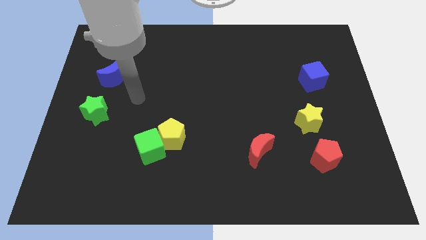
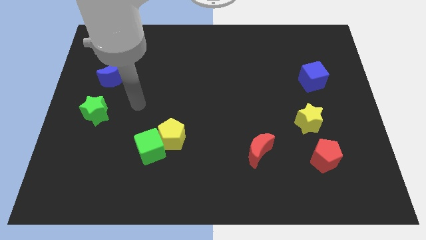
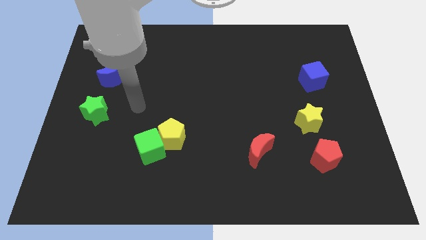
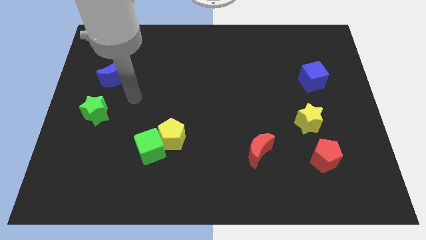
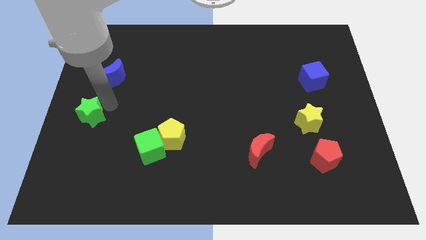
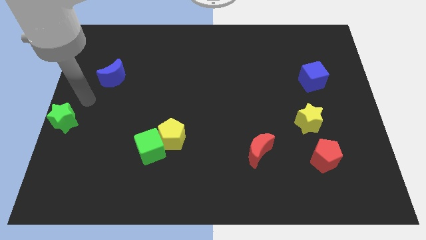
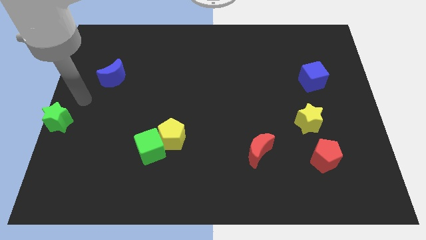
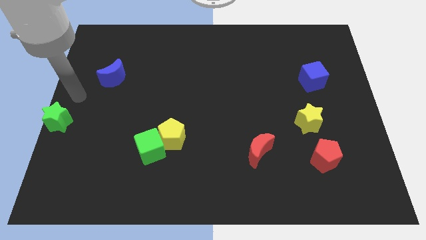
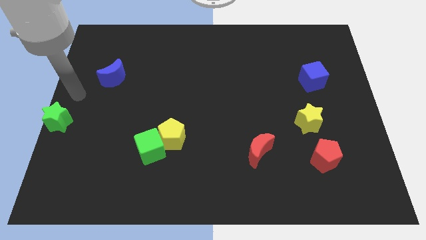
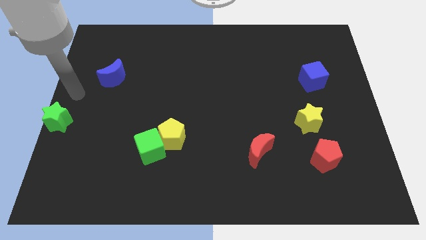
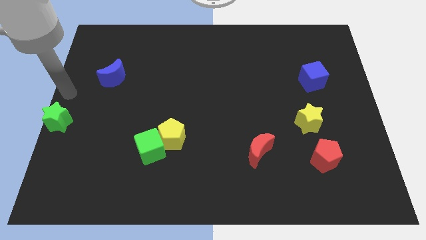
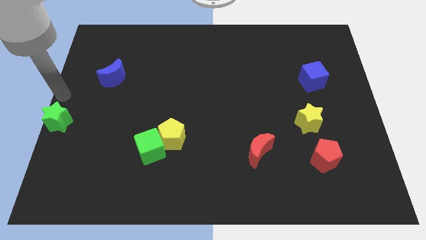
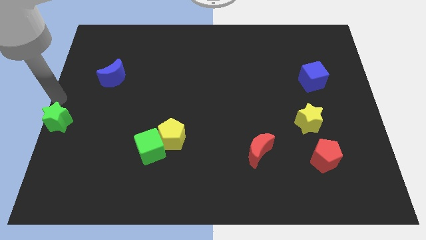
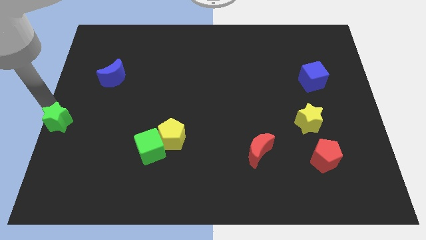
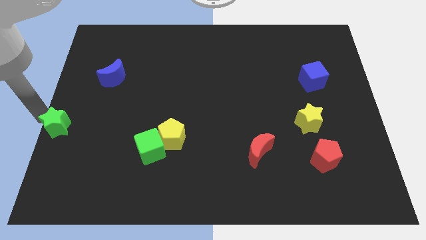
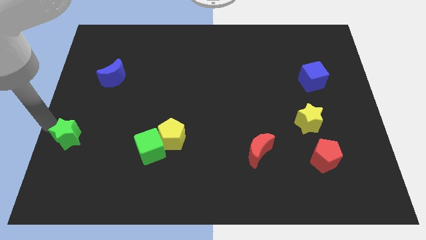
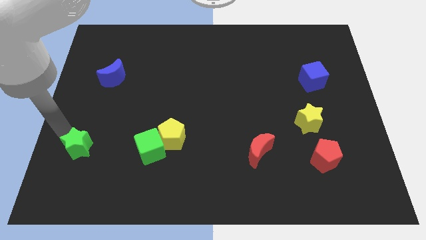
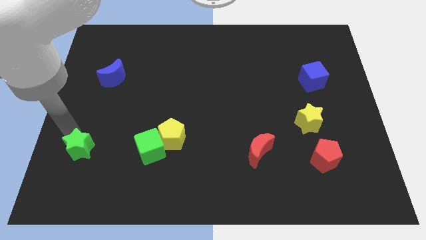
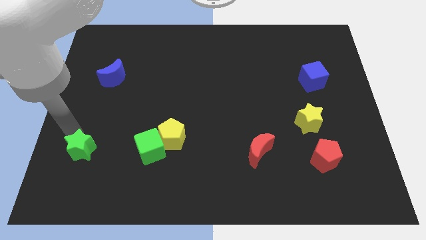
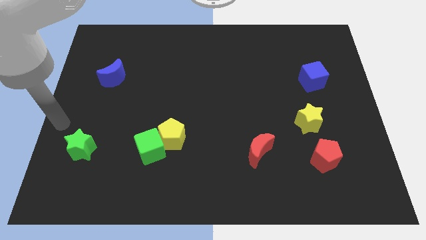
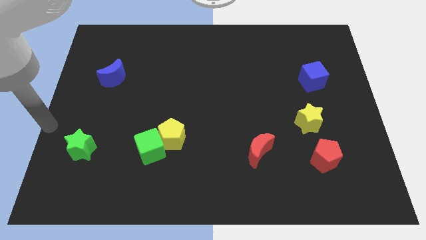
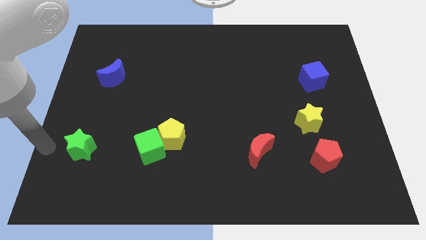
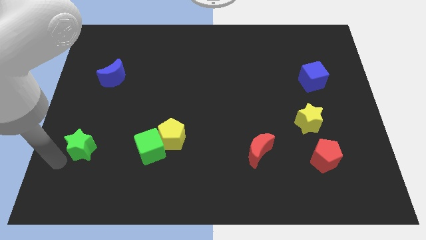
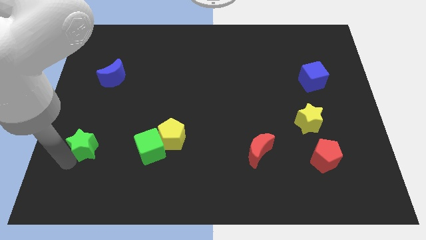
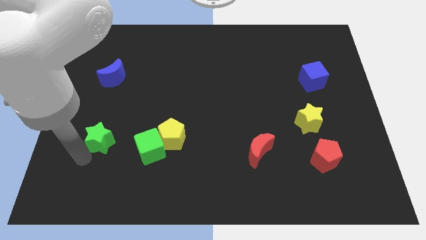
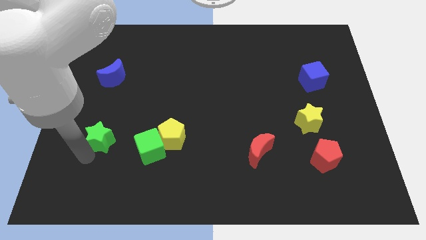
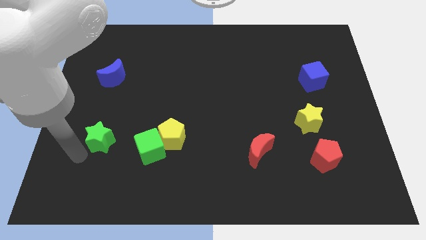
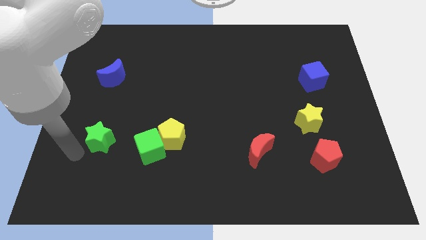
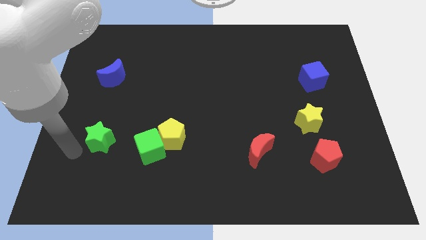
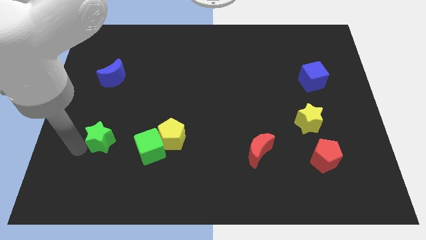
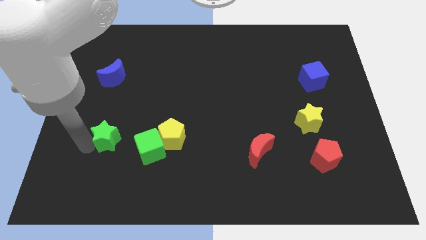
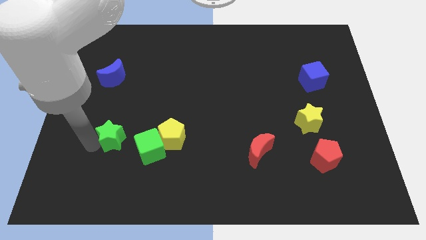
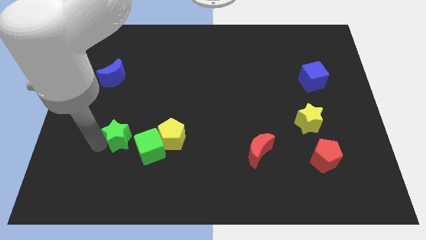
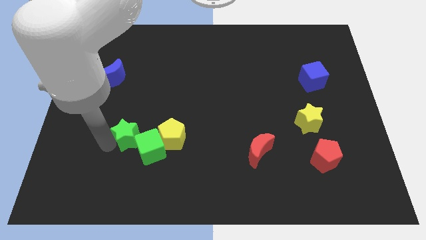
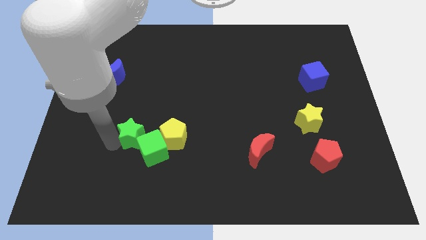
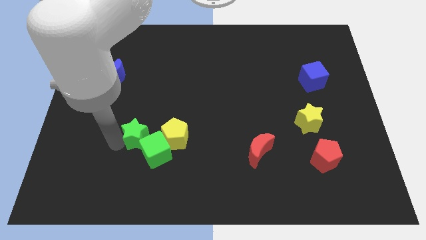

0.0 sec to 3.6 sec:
put the green star close to the green cube

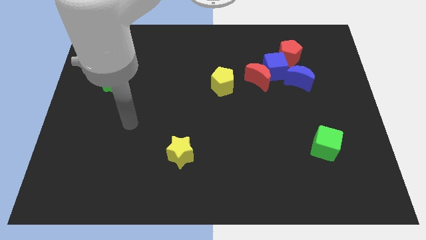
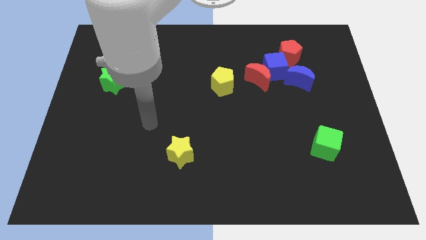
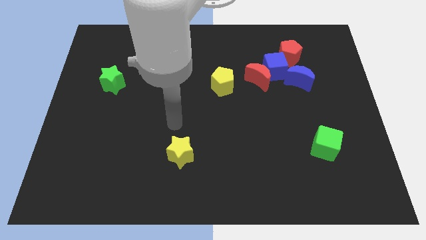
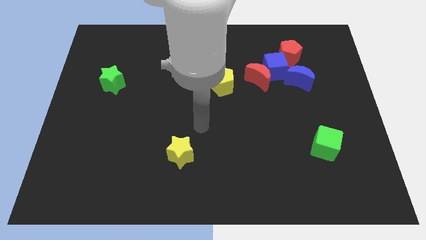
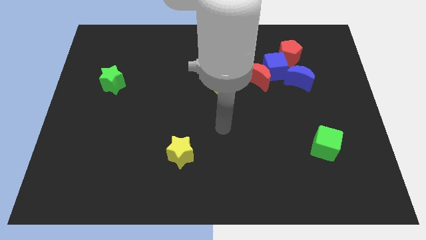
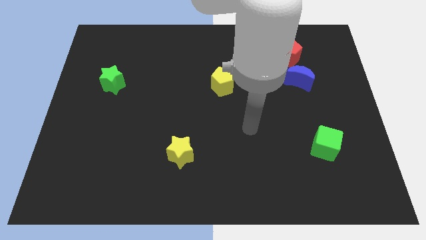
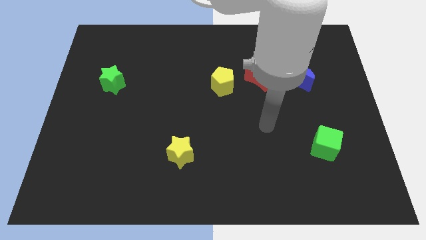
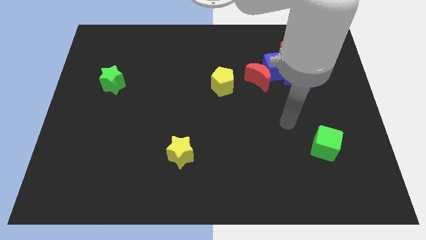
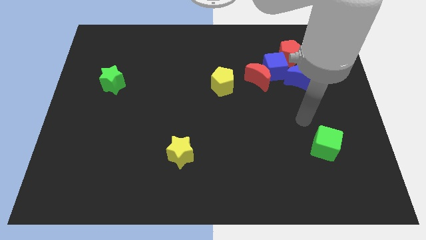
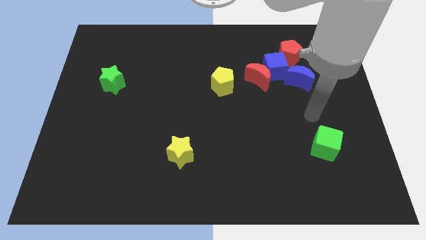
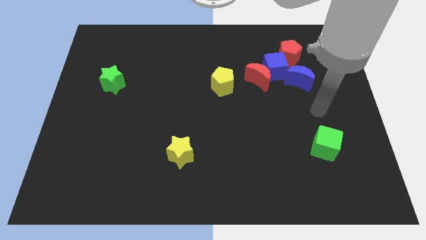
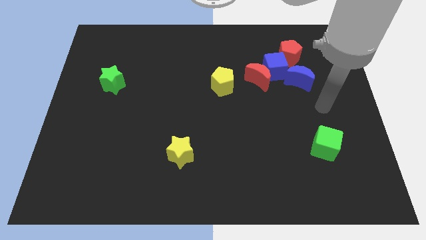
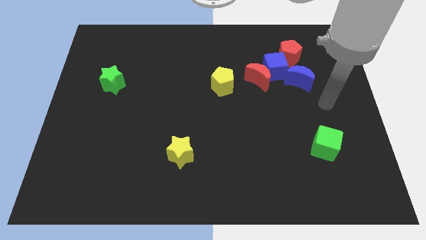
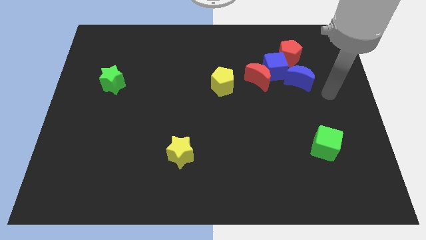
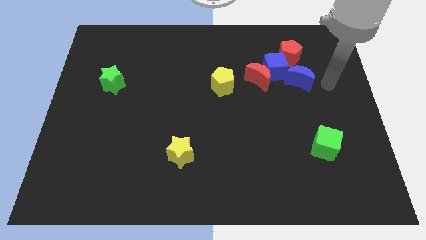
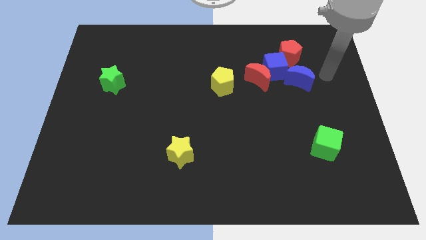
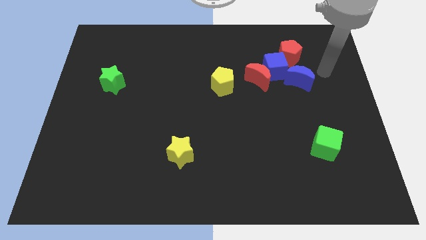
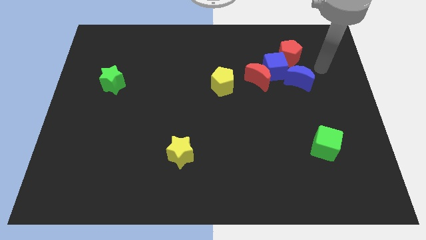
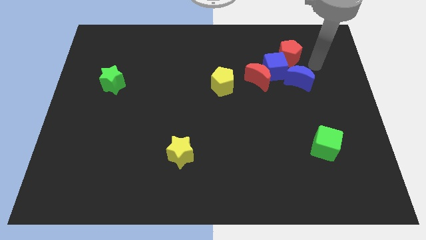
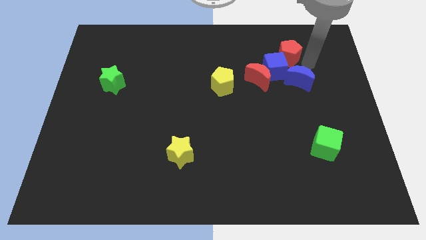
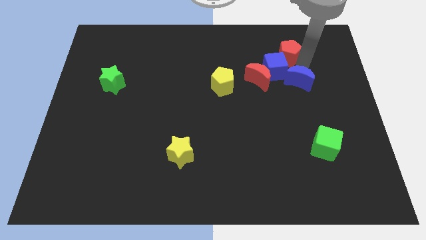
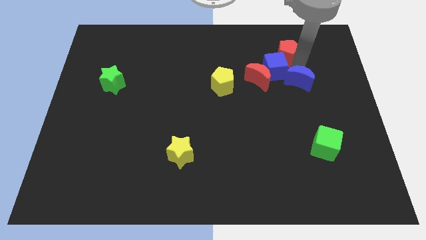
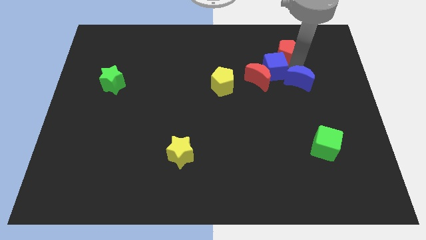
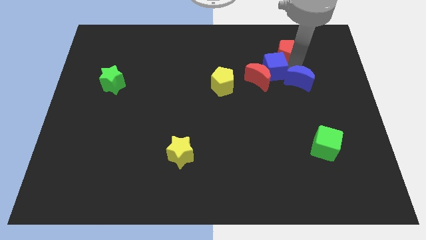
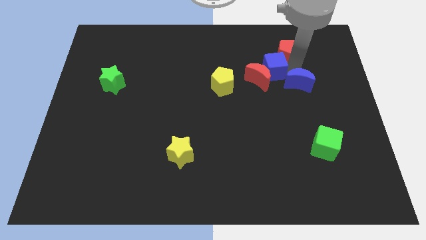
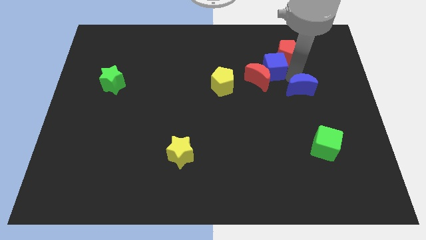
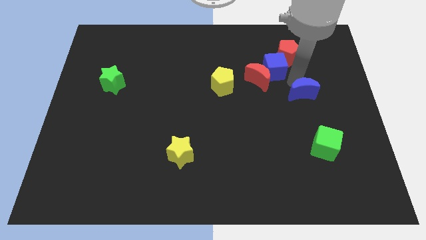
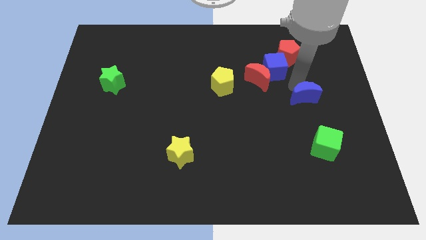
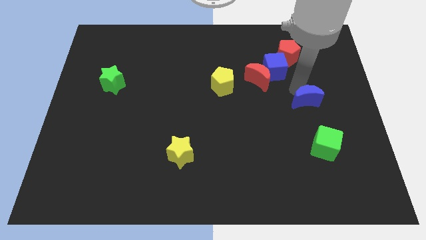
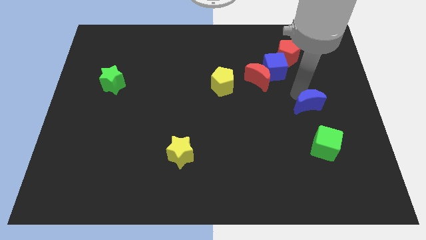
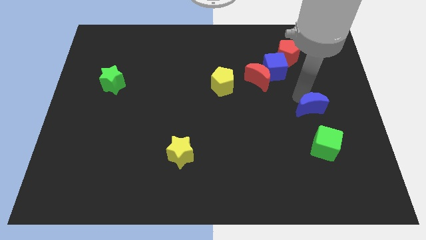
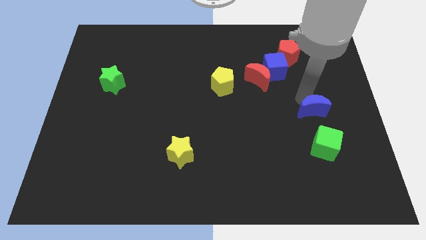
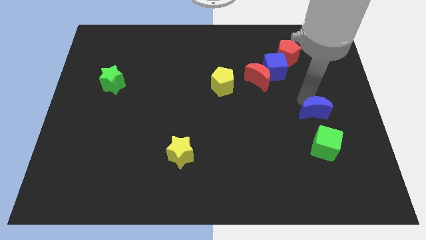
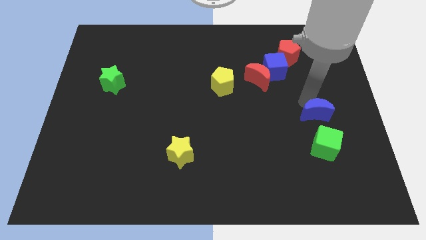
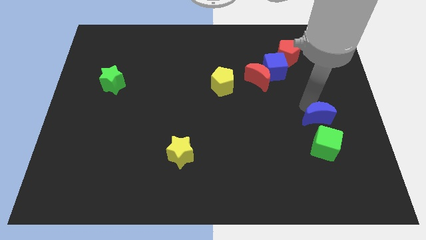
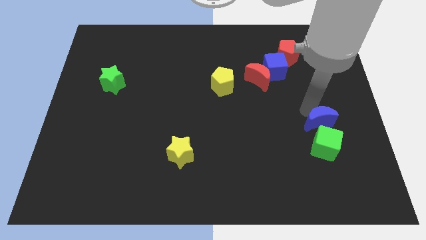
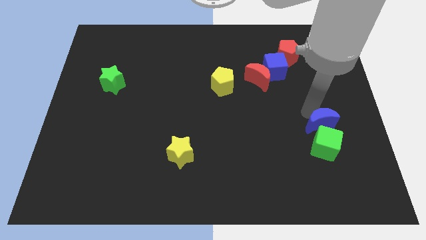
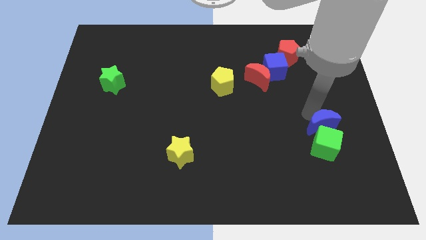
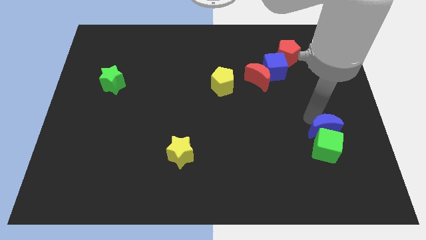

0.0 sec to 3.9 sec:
put the blue moon towards the green cube

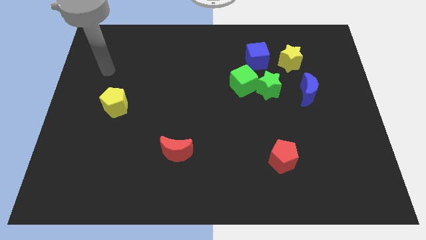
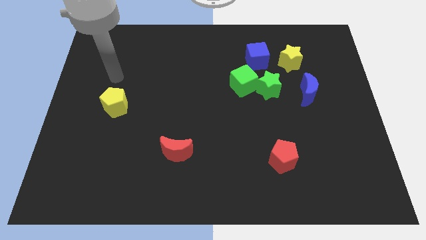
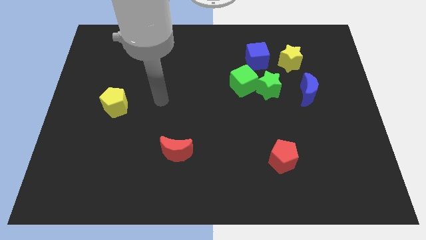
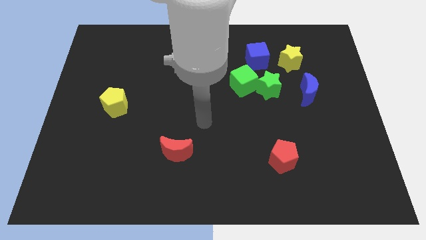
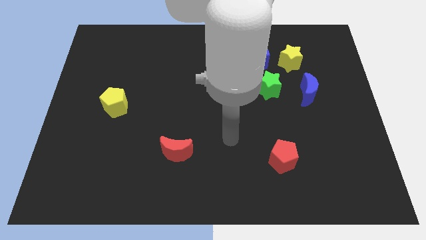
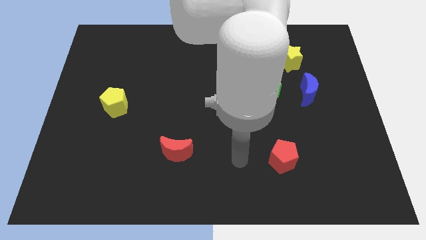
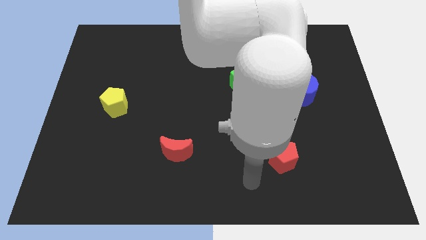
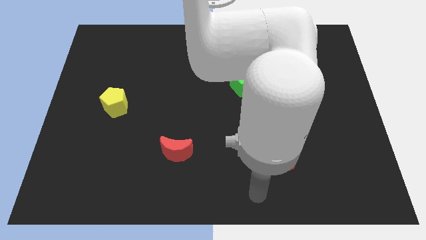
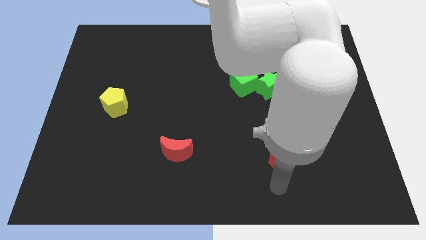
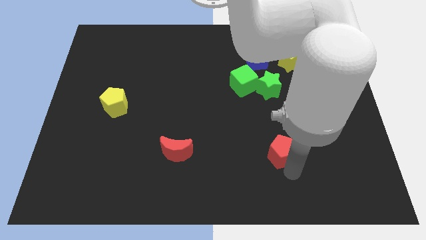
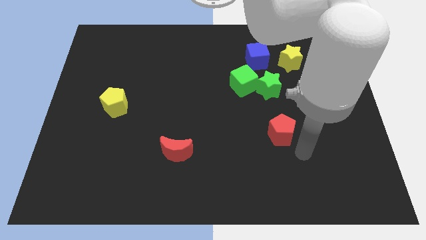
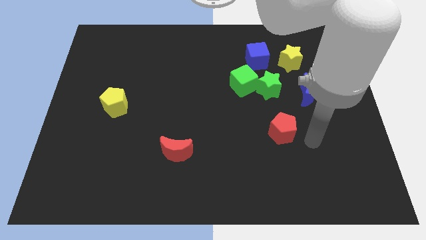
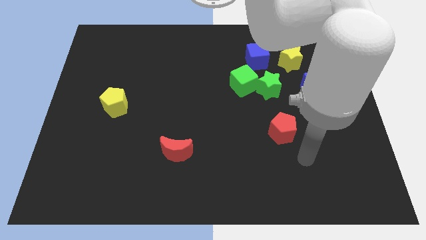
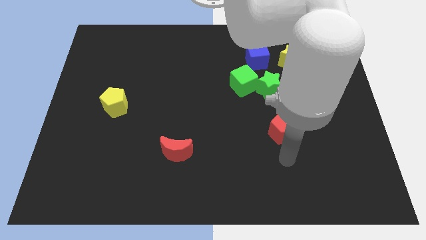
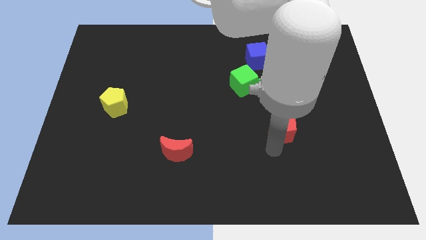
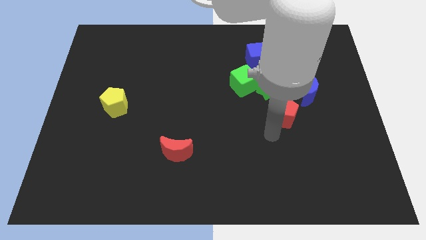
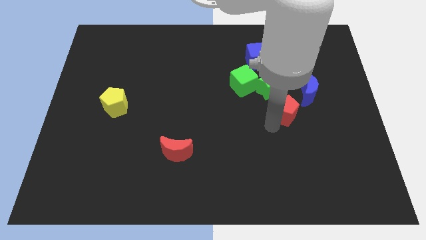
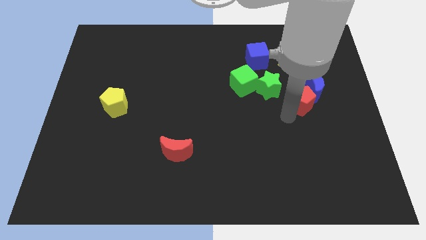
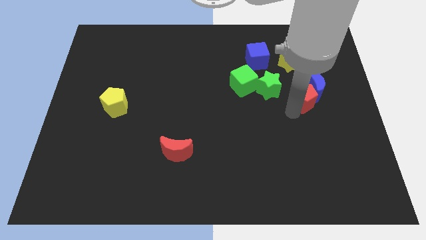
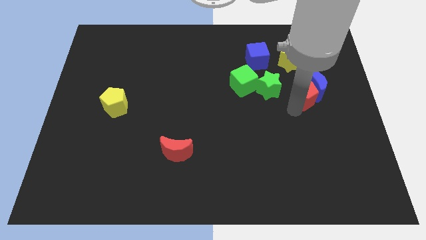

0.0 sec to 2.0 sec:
move the red pentagon towards the blue moon
